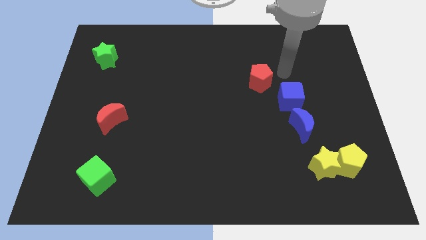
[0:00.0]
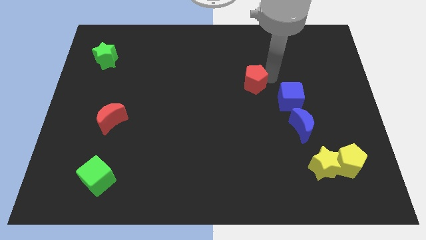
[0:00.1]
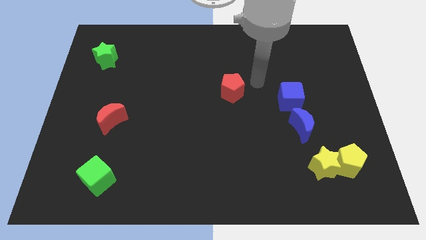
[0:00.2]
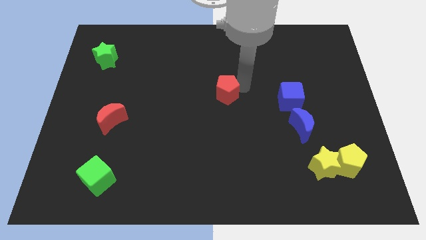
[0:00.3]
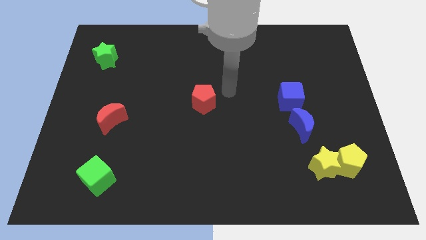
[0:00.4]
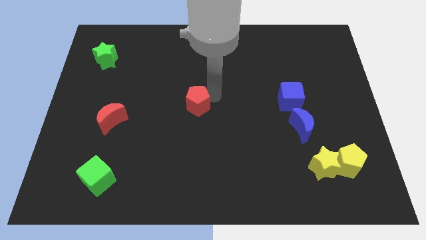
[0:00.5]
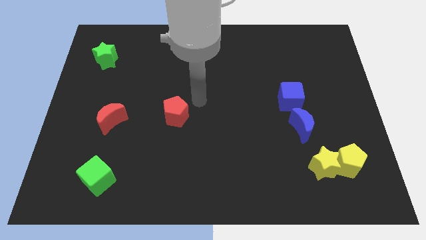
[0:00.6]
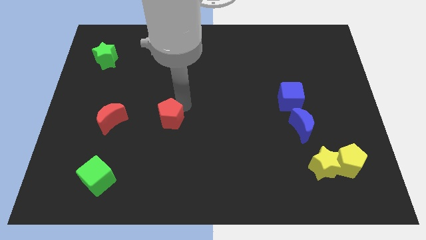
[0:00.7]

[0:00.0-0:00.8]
place the red pentagon to the right of the red moon

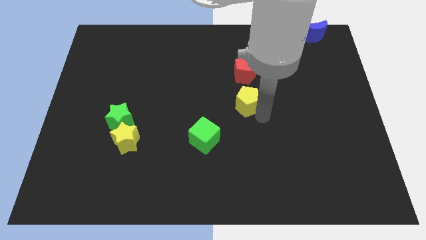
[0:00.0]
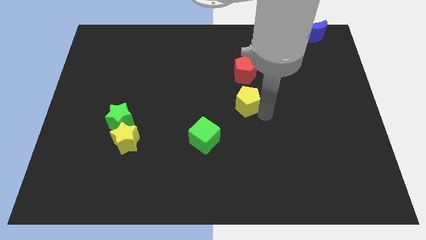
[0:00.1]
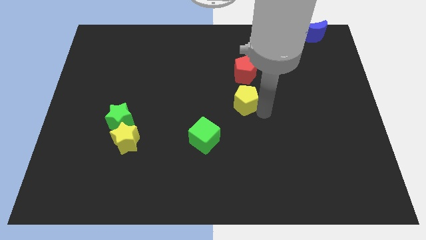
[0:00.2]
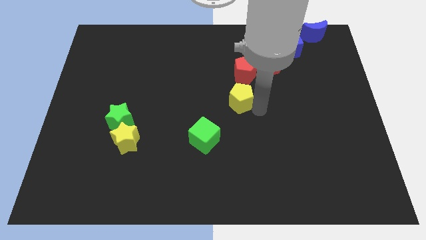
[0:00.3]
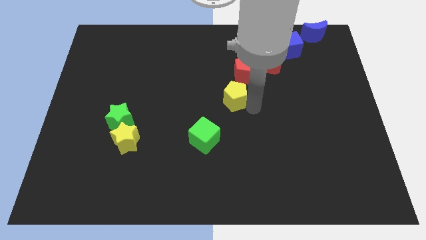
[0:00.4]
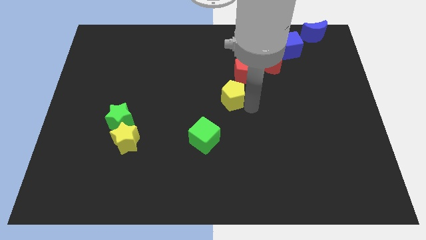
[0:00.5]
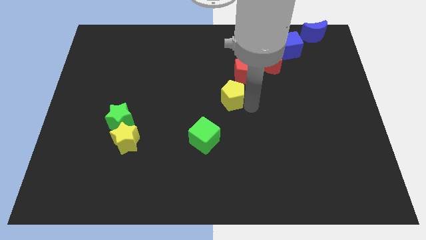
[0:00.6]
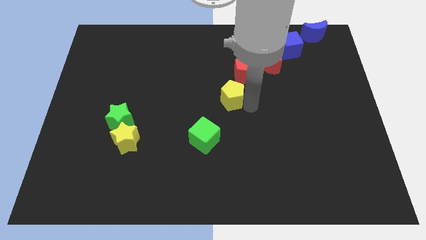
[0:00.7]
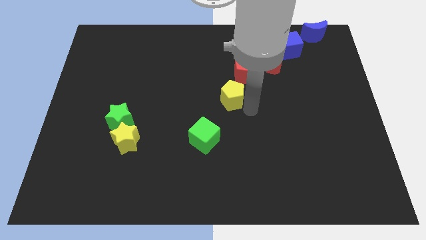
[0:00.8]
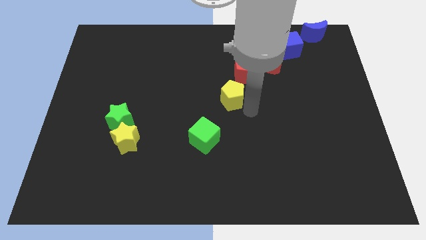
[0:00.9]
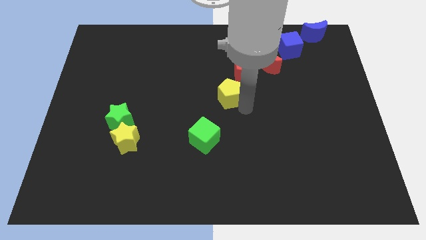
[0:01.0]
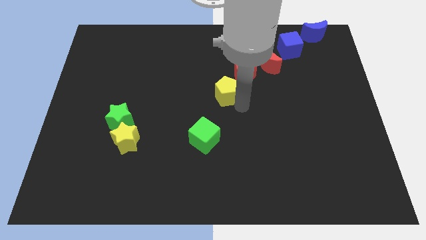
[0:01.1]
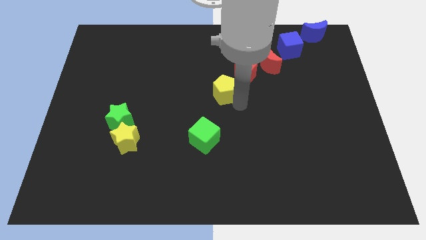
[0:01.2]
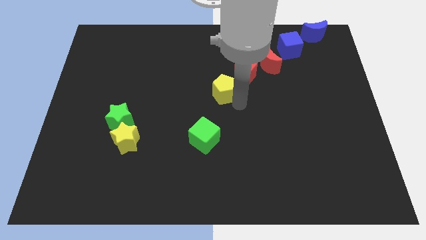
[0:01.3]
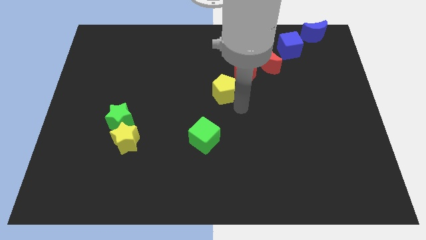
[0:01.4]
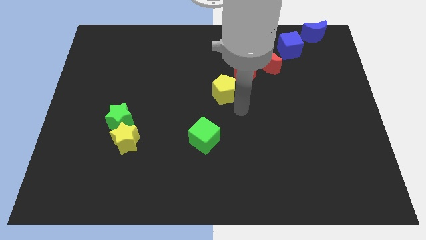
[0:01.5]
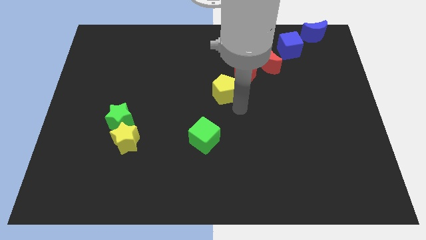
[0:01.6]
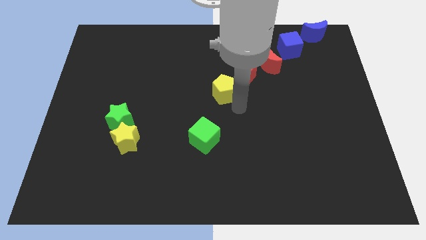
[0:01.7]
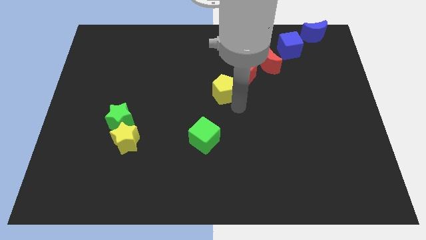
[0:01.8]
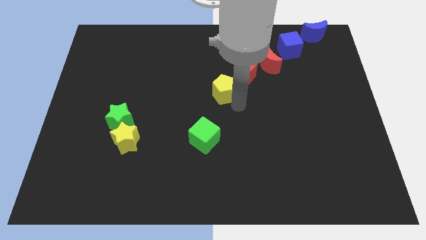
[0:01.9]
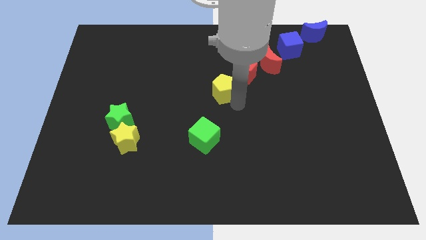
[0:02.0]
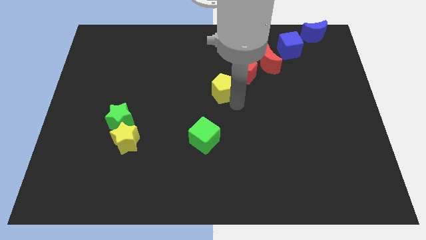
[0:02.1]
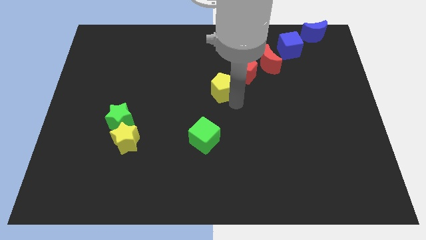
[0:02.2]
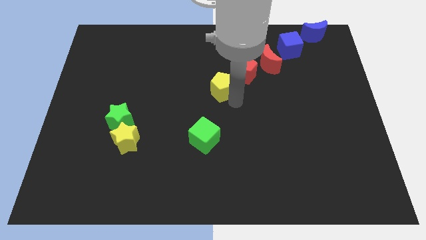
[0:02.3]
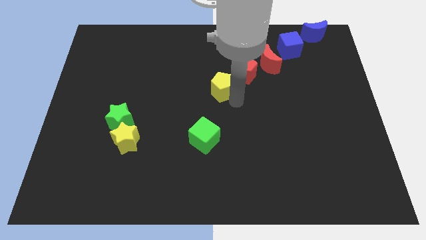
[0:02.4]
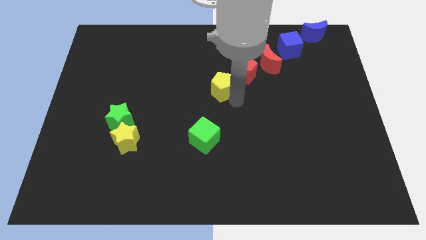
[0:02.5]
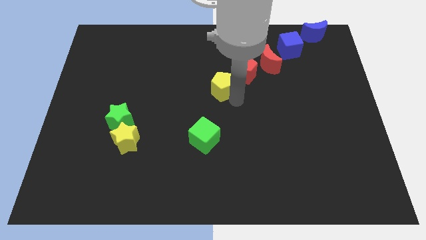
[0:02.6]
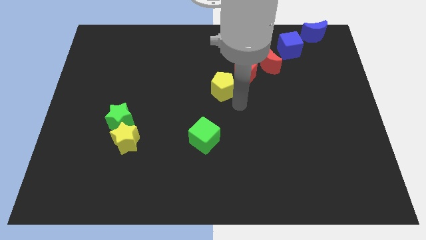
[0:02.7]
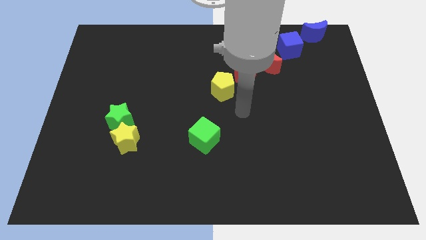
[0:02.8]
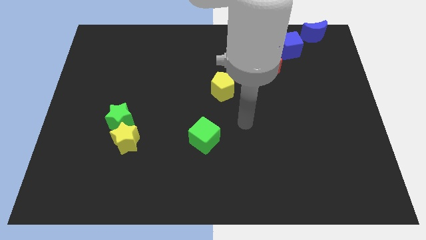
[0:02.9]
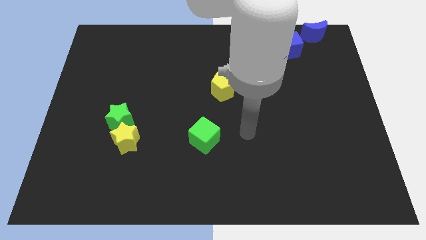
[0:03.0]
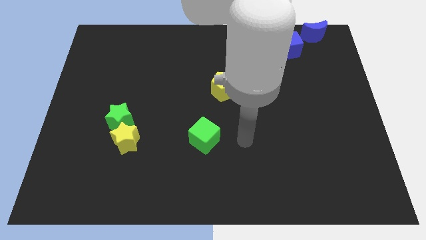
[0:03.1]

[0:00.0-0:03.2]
move the yellow pentagon in between the red pentagon and yellow star

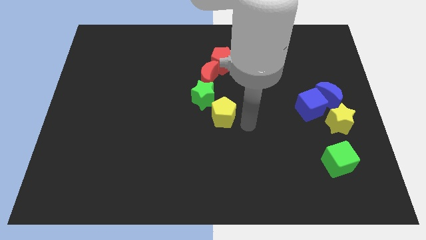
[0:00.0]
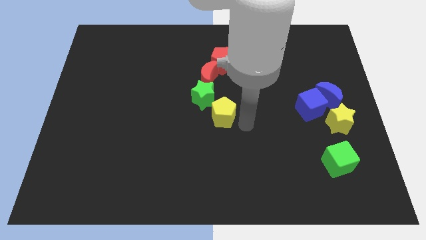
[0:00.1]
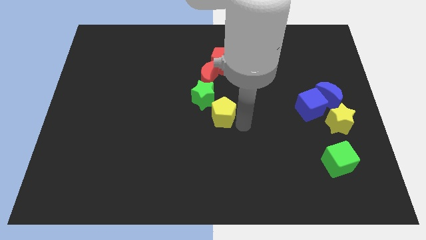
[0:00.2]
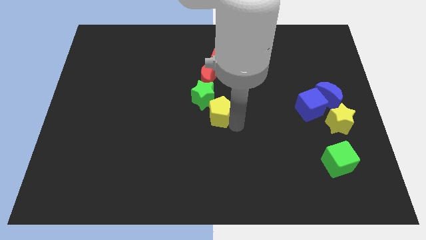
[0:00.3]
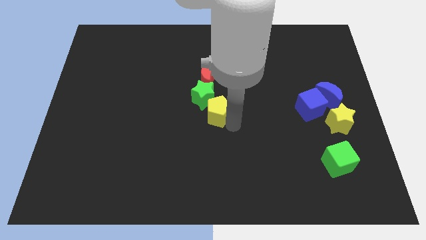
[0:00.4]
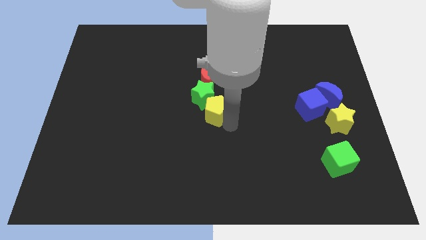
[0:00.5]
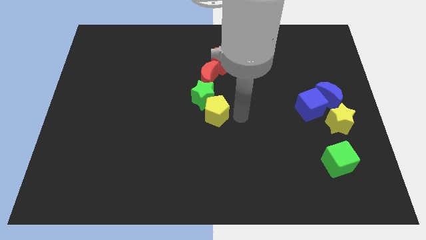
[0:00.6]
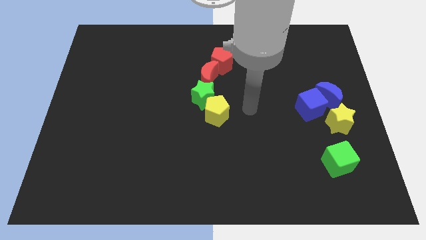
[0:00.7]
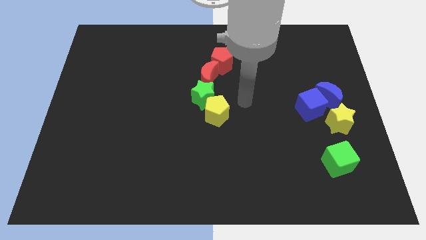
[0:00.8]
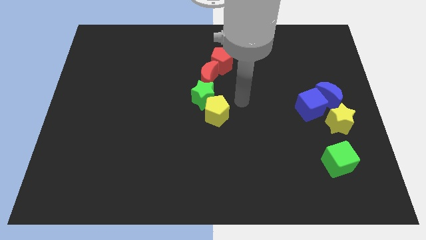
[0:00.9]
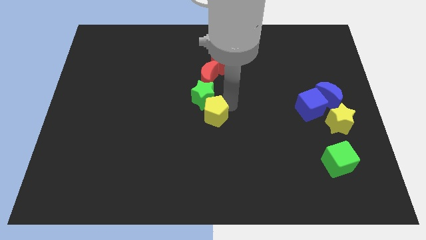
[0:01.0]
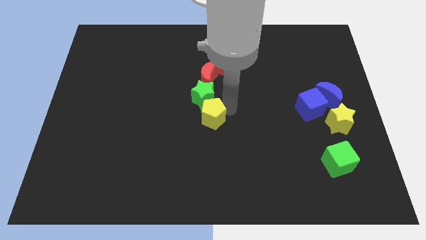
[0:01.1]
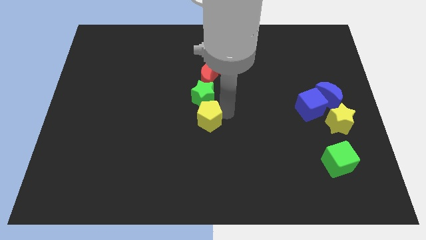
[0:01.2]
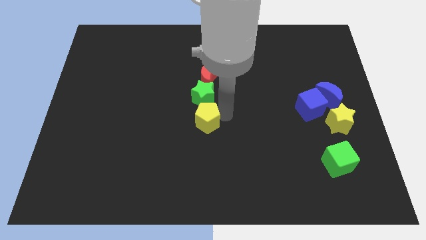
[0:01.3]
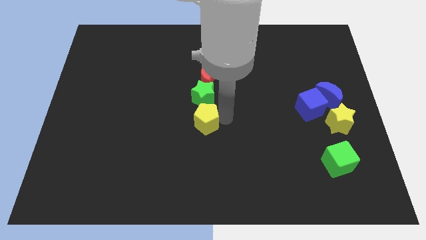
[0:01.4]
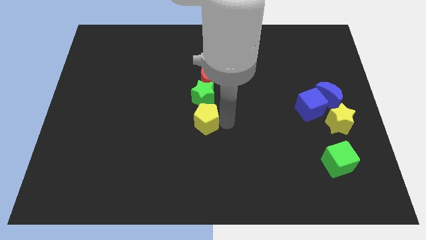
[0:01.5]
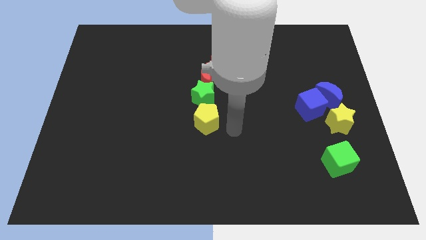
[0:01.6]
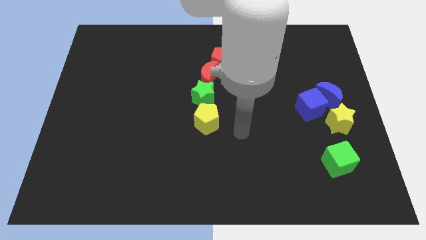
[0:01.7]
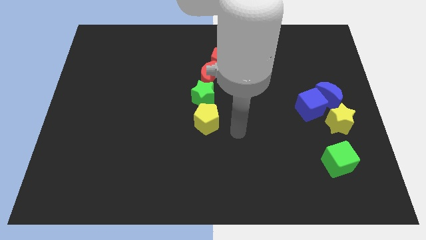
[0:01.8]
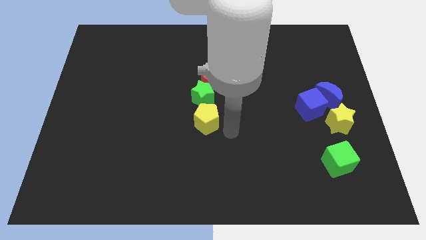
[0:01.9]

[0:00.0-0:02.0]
put the yellow pentagon to the bottom side of the green star

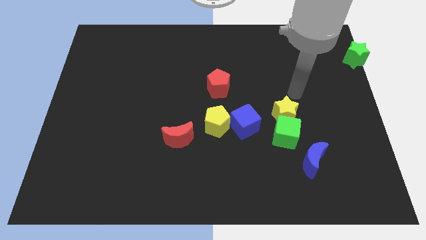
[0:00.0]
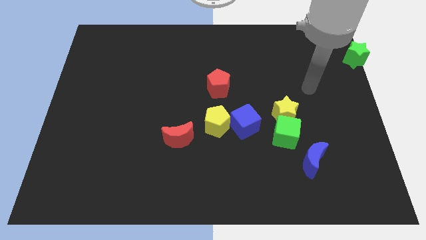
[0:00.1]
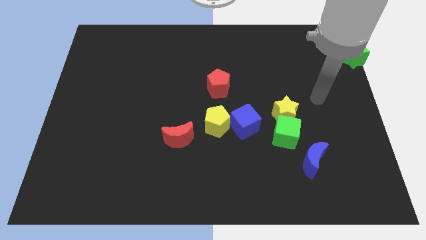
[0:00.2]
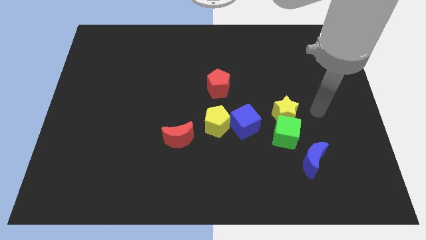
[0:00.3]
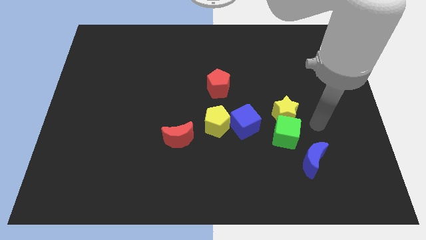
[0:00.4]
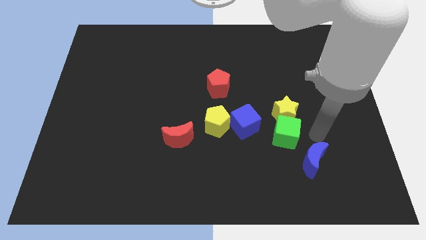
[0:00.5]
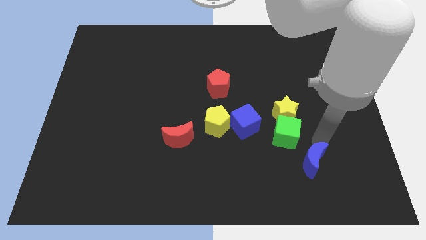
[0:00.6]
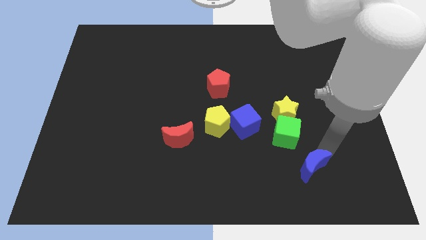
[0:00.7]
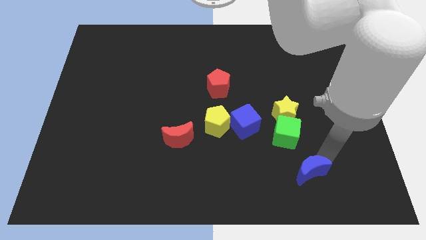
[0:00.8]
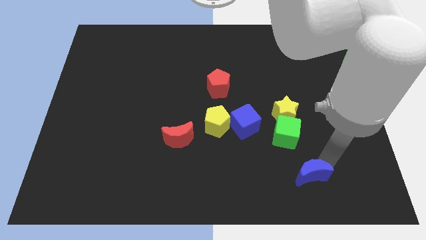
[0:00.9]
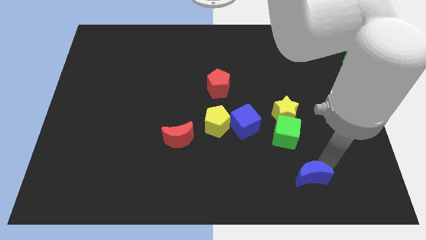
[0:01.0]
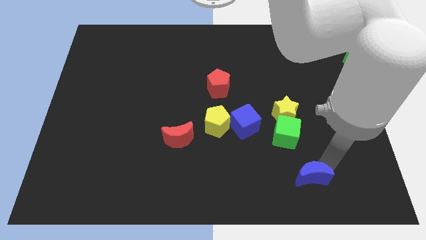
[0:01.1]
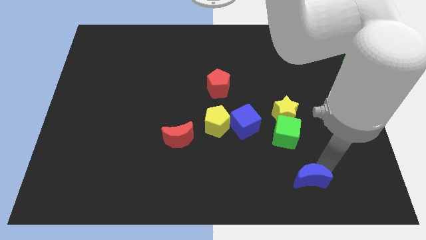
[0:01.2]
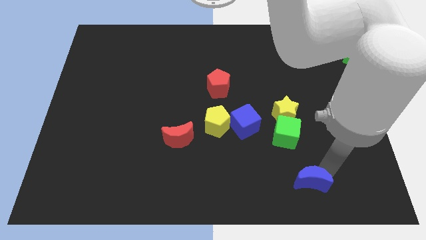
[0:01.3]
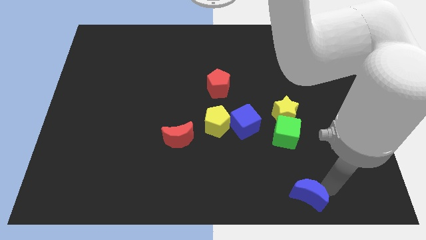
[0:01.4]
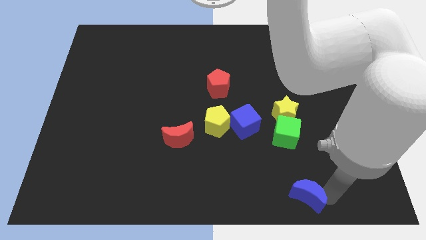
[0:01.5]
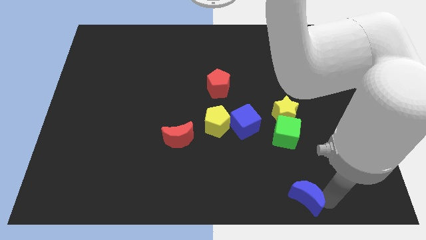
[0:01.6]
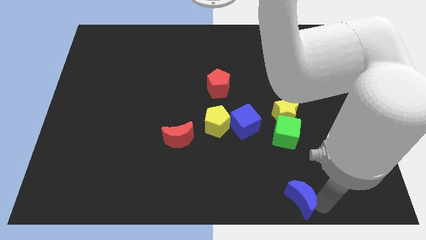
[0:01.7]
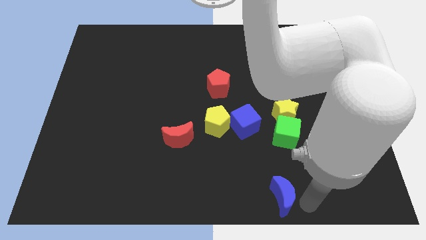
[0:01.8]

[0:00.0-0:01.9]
place the blue moon underneath the green cube

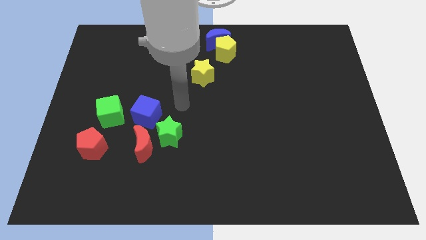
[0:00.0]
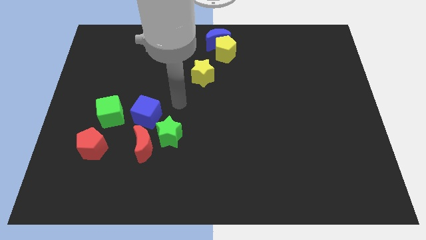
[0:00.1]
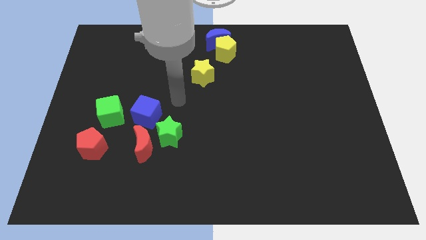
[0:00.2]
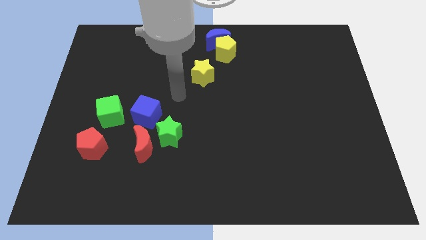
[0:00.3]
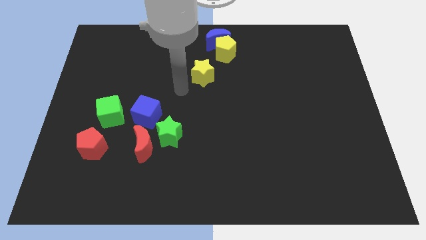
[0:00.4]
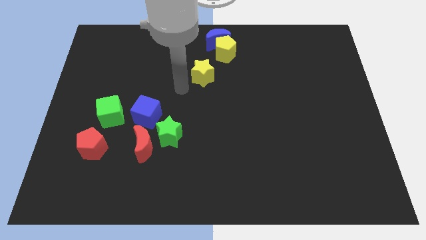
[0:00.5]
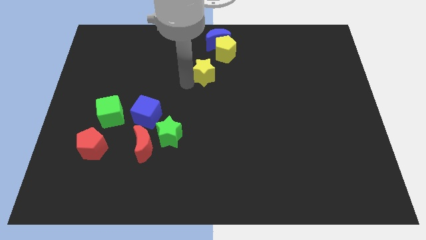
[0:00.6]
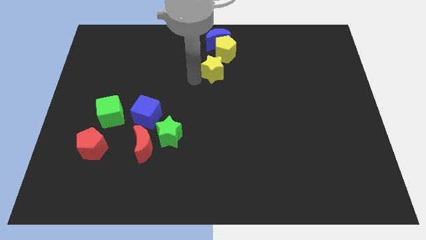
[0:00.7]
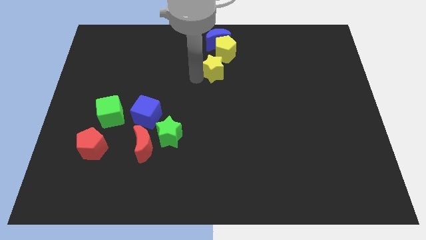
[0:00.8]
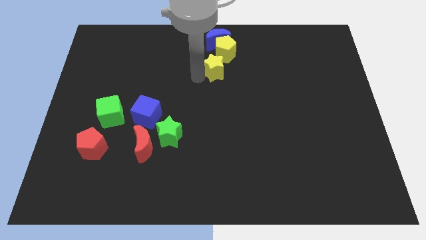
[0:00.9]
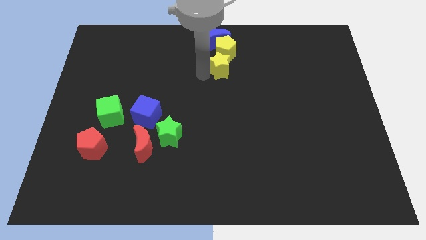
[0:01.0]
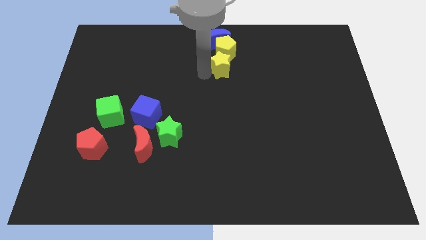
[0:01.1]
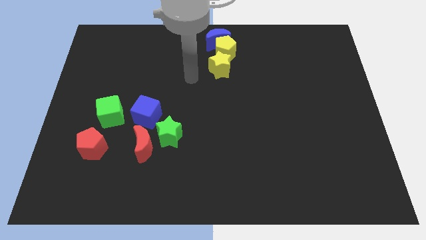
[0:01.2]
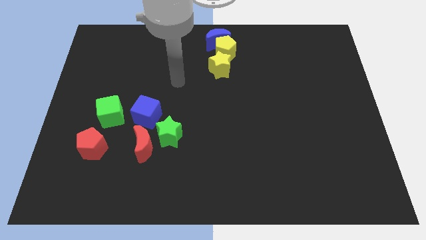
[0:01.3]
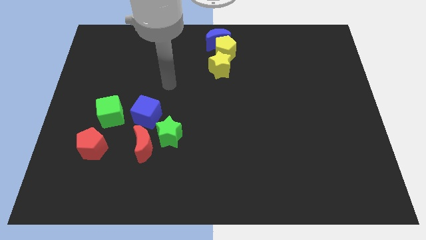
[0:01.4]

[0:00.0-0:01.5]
push the yellow star to the bottom side of the yellow pentagon
